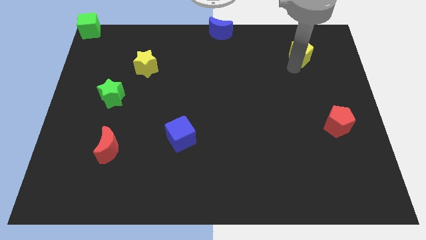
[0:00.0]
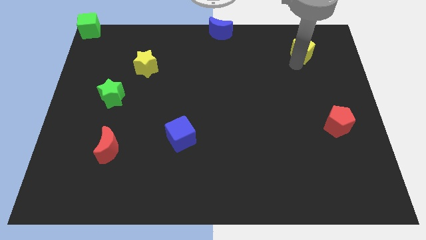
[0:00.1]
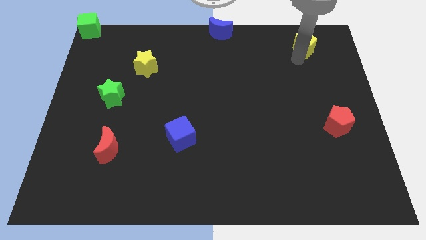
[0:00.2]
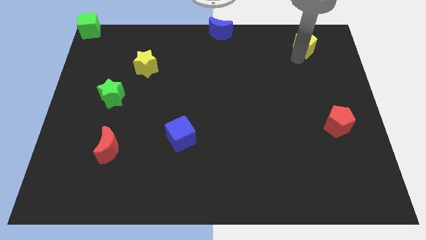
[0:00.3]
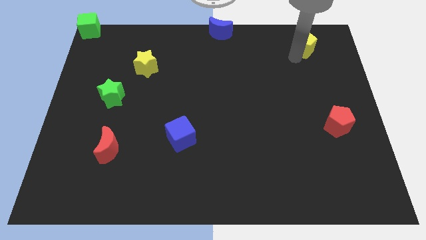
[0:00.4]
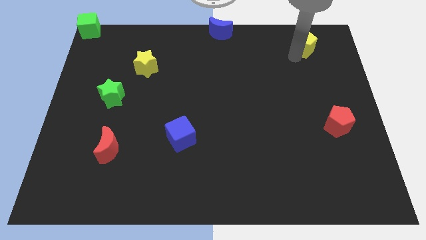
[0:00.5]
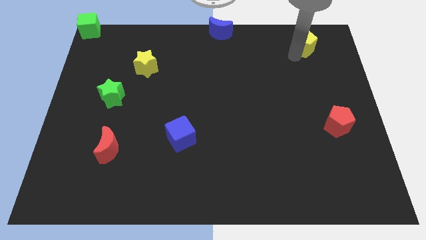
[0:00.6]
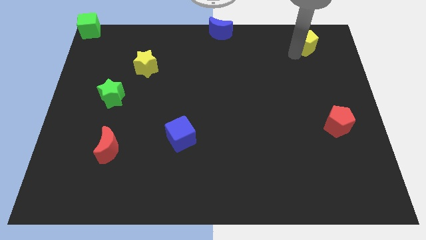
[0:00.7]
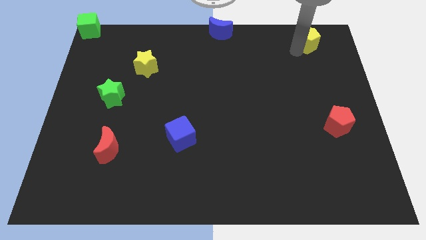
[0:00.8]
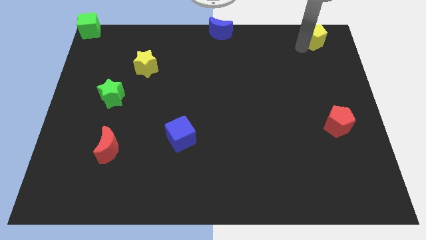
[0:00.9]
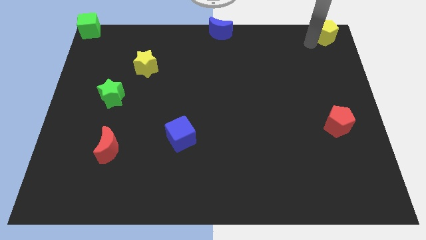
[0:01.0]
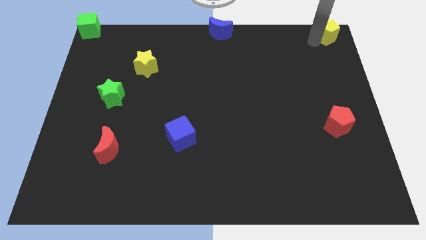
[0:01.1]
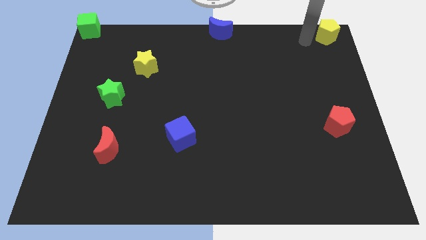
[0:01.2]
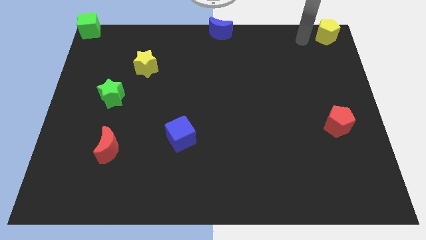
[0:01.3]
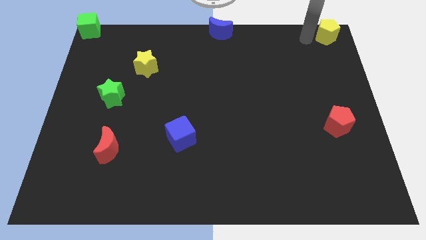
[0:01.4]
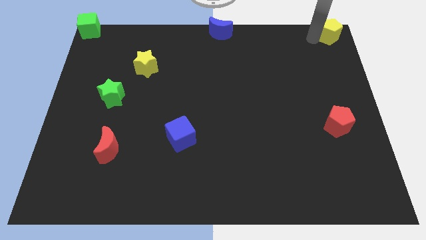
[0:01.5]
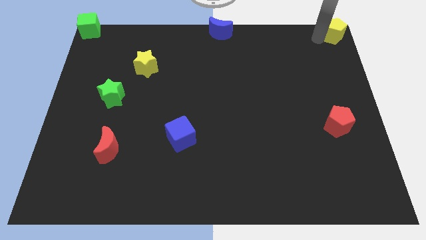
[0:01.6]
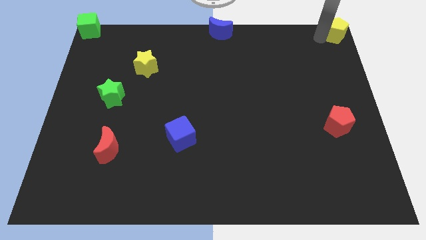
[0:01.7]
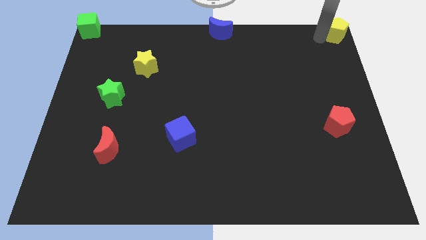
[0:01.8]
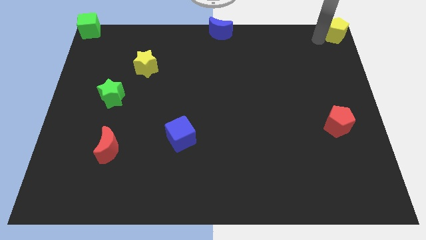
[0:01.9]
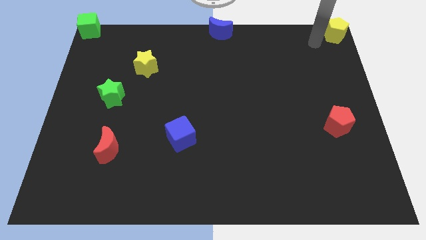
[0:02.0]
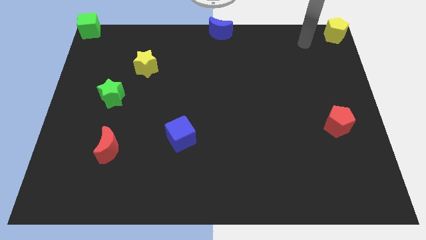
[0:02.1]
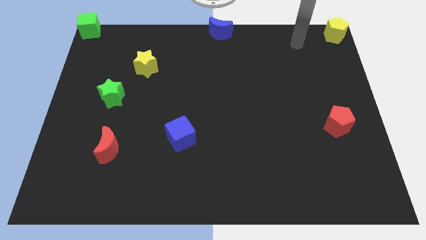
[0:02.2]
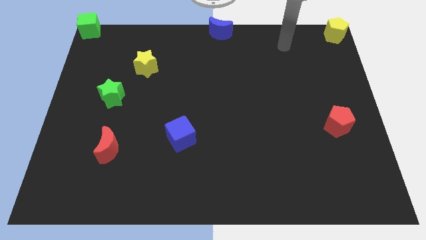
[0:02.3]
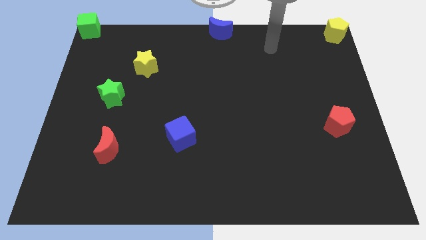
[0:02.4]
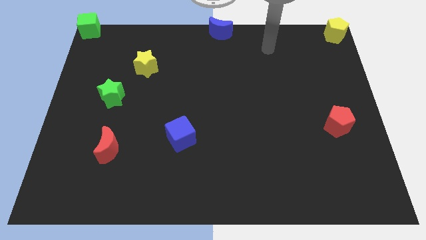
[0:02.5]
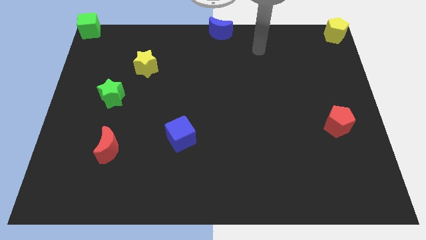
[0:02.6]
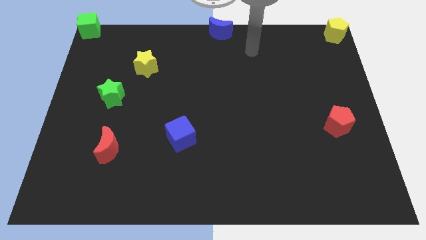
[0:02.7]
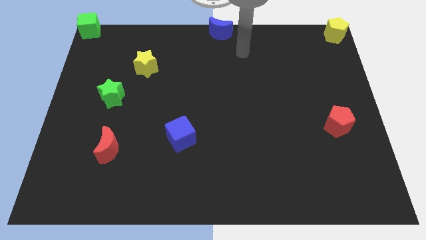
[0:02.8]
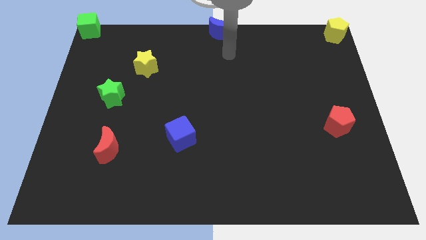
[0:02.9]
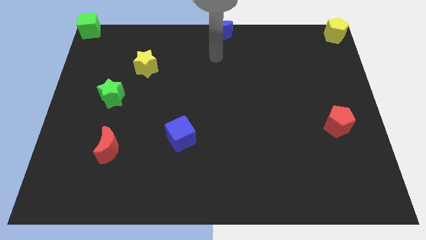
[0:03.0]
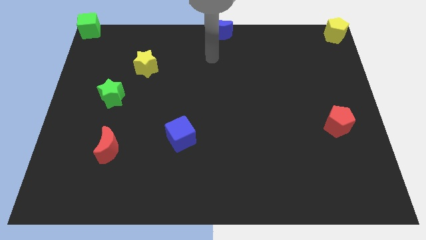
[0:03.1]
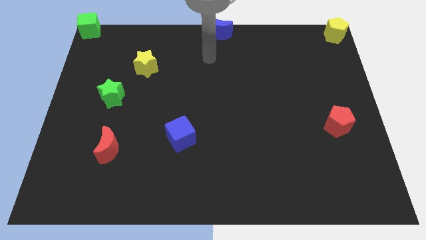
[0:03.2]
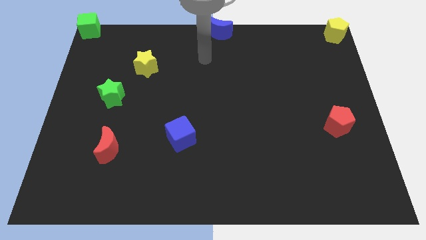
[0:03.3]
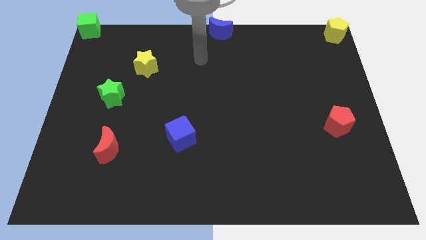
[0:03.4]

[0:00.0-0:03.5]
move the yellow pentagon parallel right to the blue moon

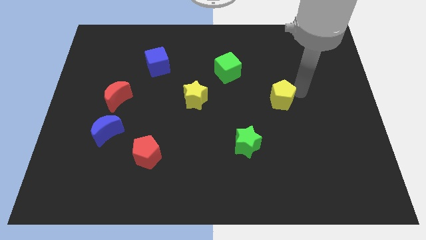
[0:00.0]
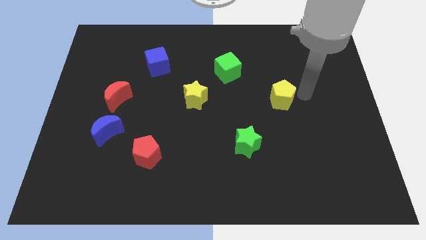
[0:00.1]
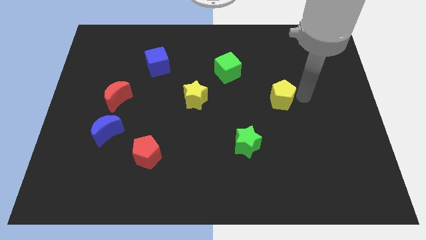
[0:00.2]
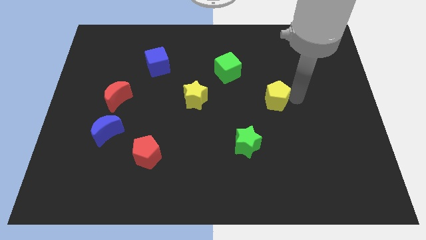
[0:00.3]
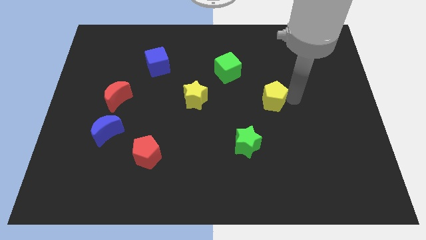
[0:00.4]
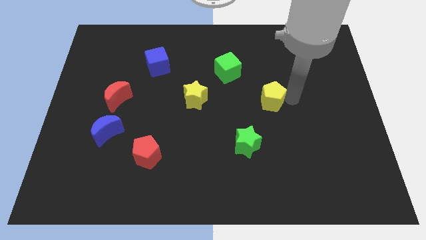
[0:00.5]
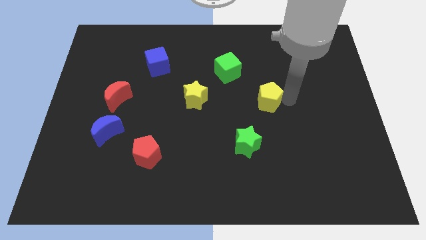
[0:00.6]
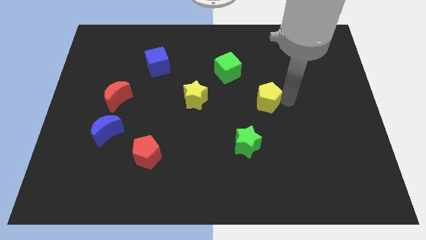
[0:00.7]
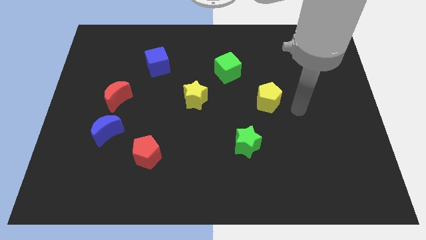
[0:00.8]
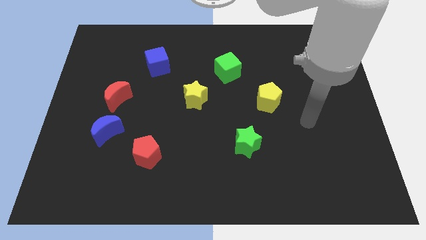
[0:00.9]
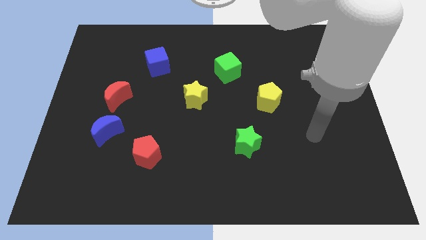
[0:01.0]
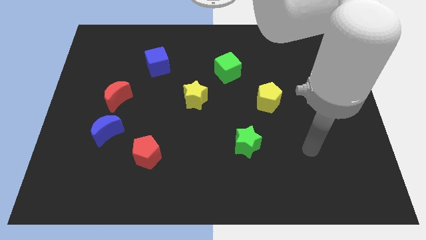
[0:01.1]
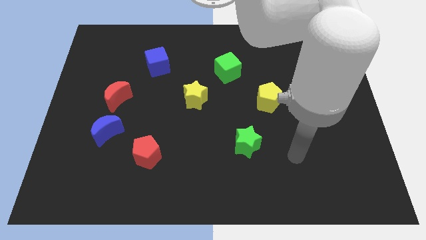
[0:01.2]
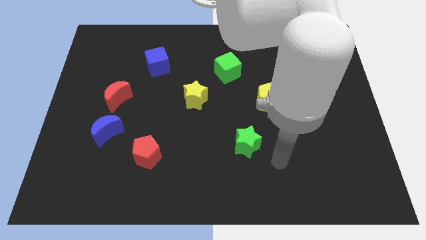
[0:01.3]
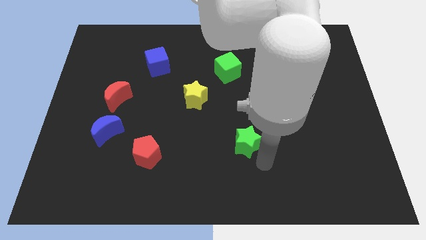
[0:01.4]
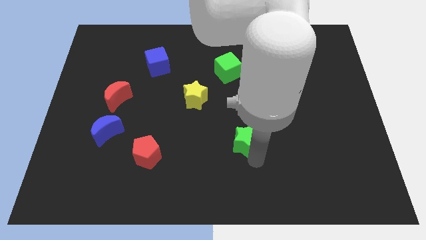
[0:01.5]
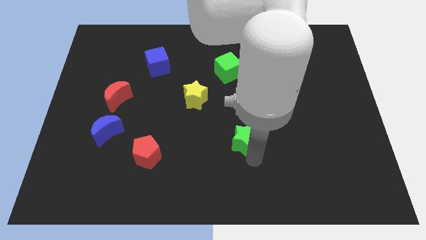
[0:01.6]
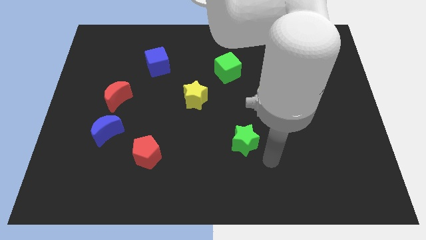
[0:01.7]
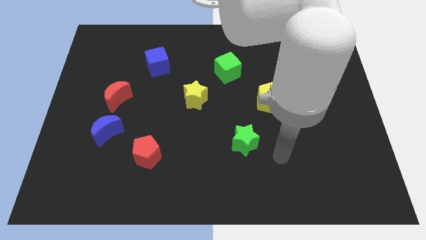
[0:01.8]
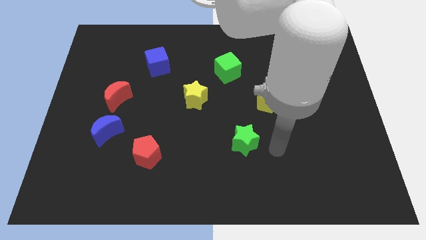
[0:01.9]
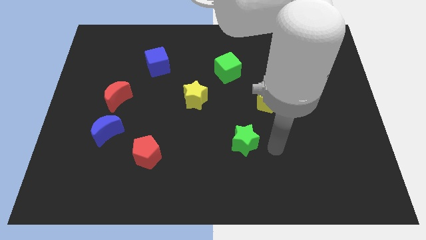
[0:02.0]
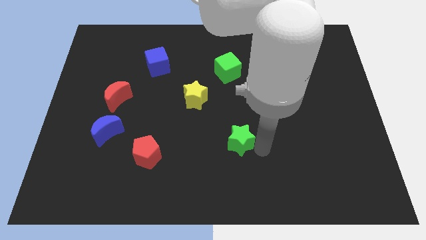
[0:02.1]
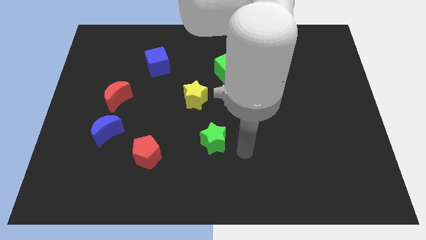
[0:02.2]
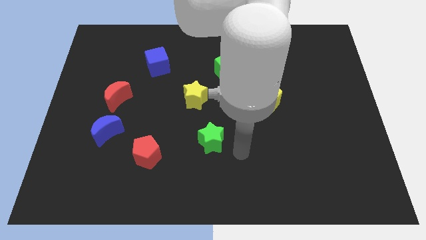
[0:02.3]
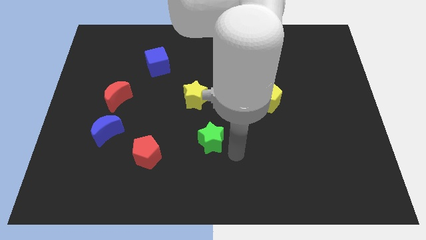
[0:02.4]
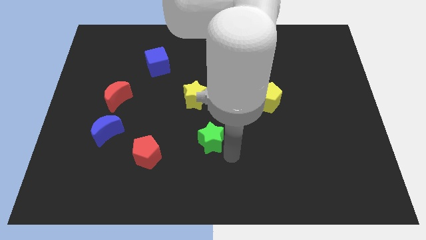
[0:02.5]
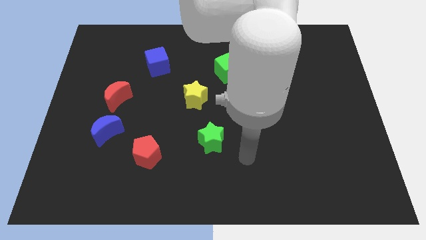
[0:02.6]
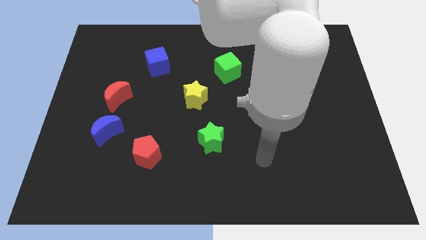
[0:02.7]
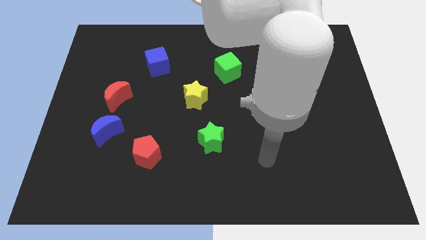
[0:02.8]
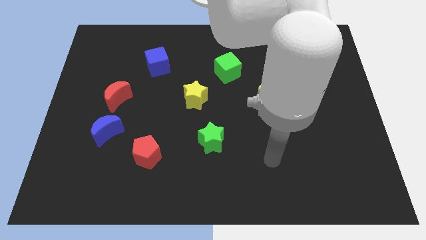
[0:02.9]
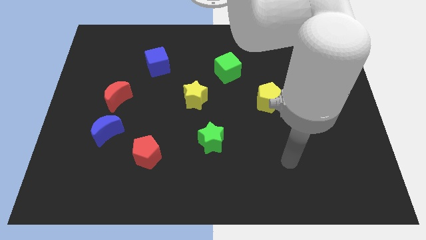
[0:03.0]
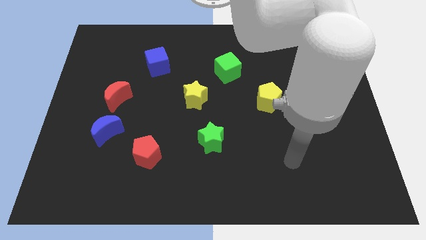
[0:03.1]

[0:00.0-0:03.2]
move the green star to the right of the red pentagon

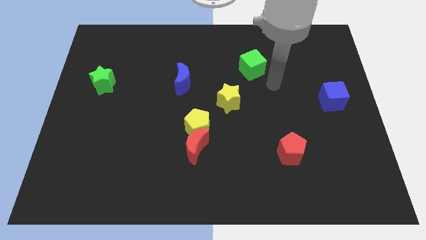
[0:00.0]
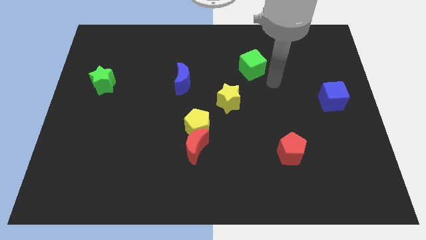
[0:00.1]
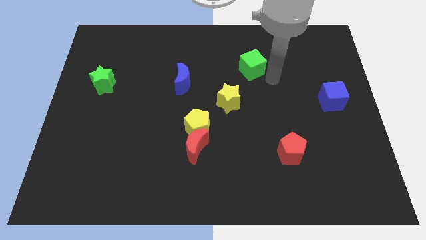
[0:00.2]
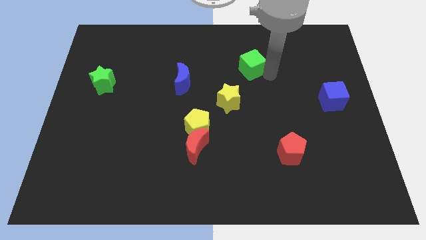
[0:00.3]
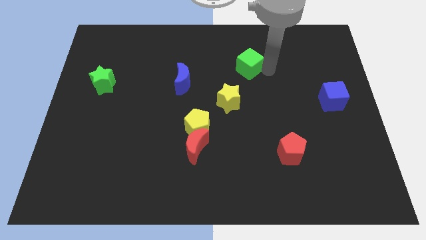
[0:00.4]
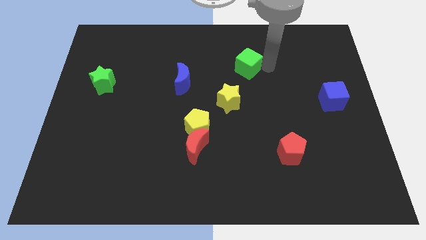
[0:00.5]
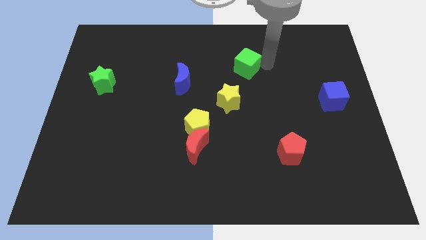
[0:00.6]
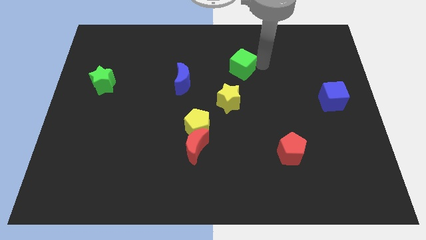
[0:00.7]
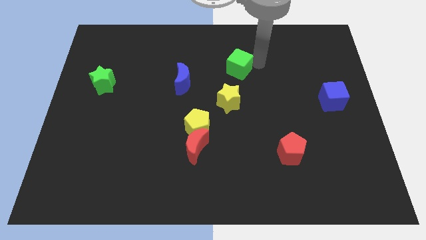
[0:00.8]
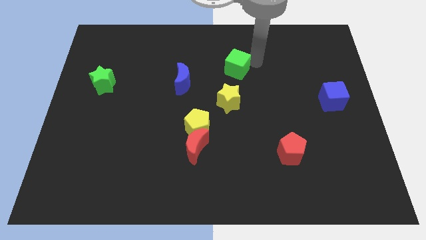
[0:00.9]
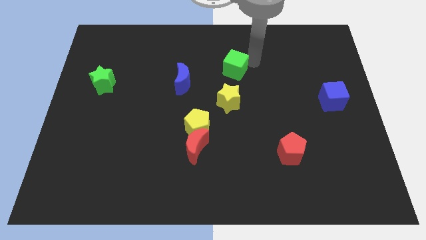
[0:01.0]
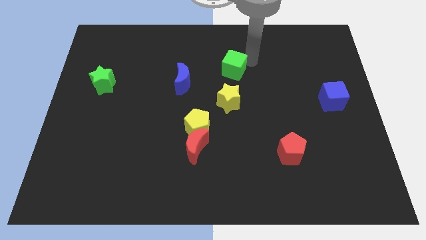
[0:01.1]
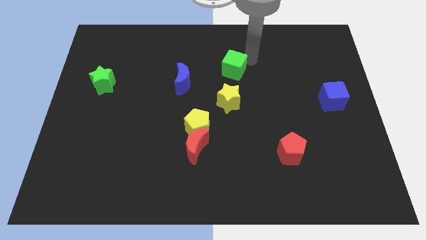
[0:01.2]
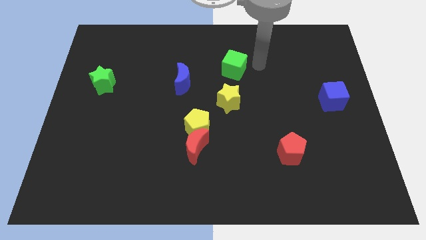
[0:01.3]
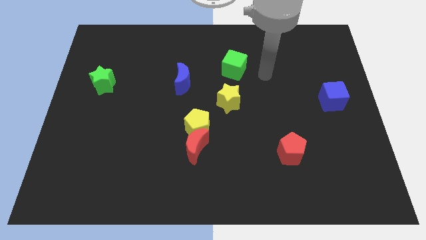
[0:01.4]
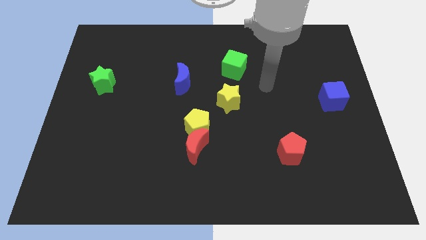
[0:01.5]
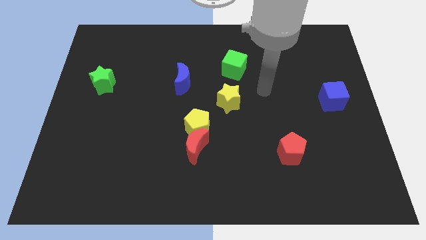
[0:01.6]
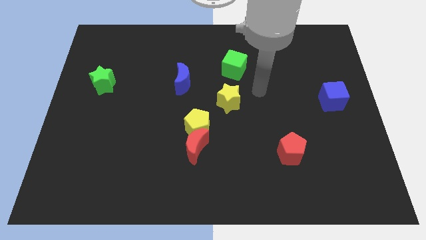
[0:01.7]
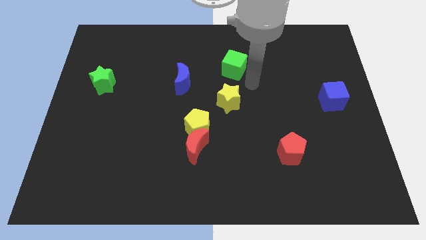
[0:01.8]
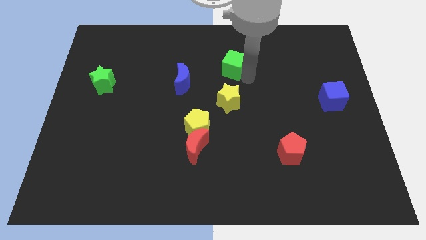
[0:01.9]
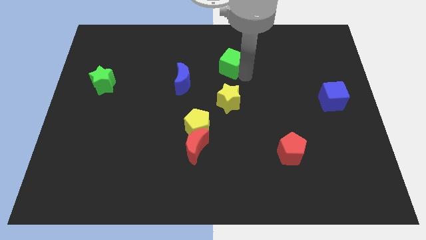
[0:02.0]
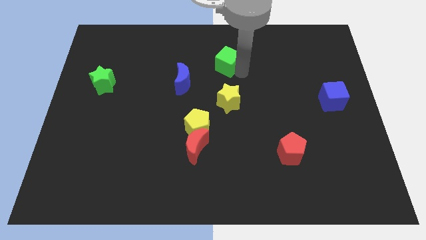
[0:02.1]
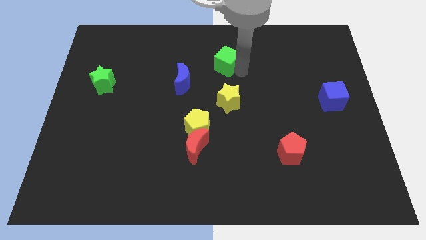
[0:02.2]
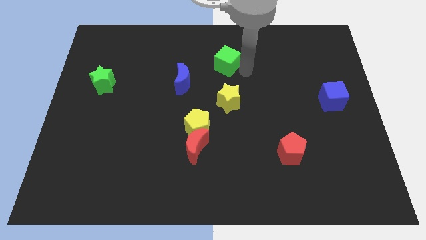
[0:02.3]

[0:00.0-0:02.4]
put the green cube above the yellow star
